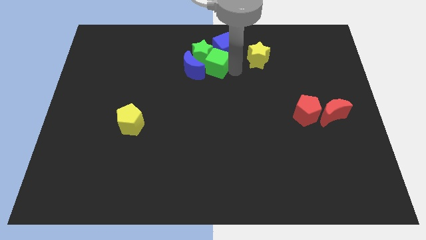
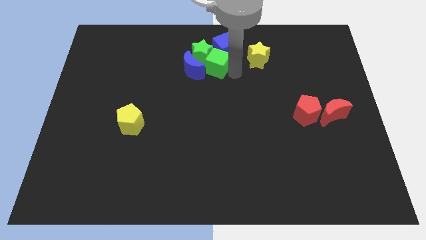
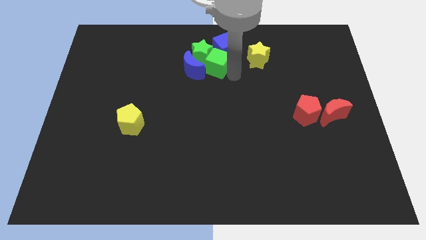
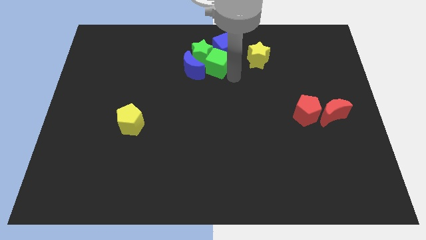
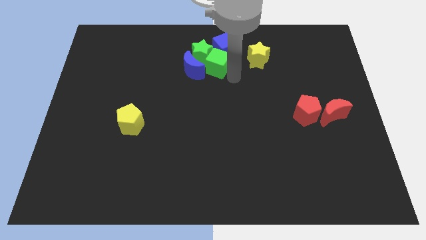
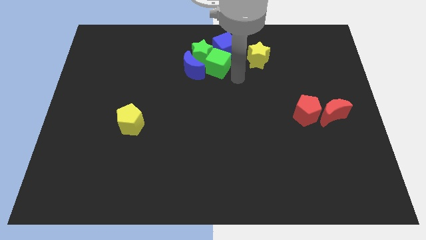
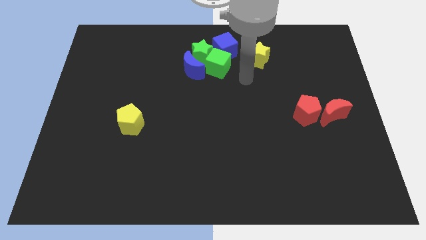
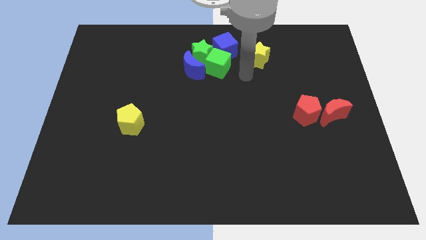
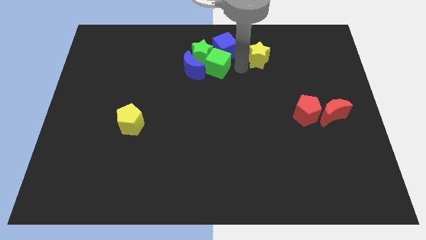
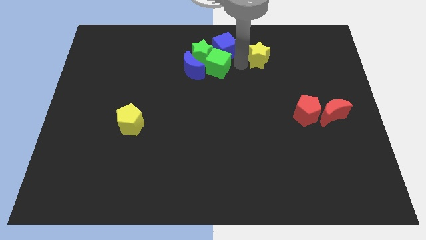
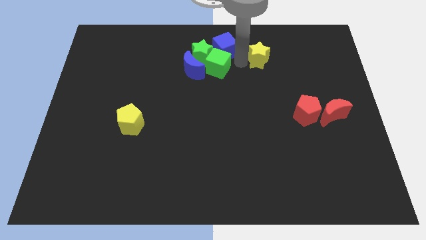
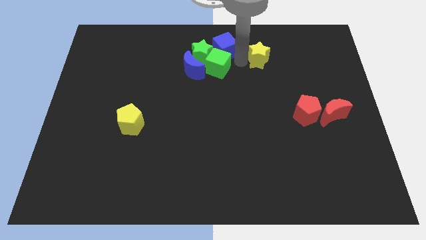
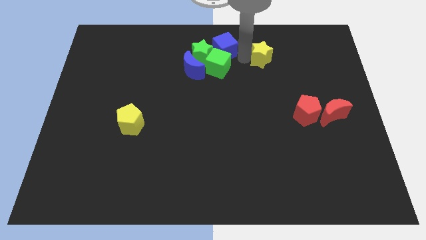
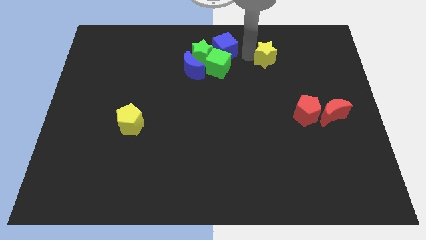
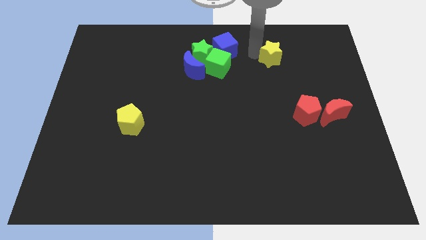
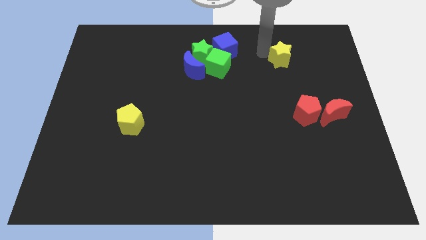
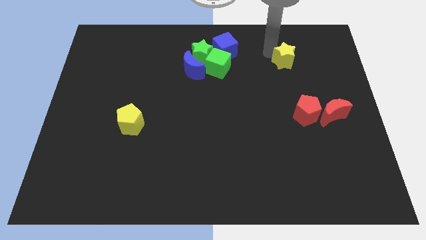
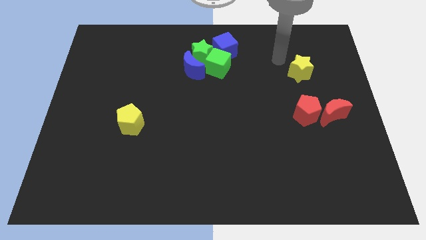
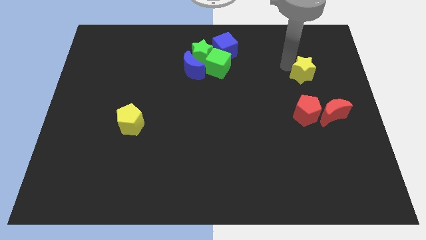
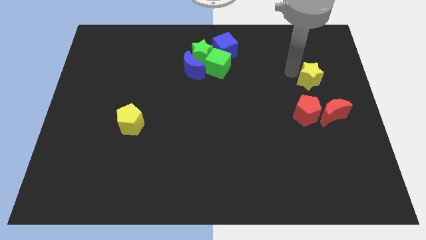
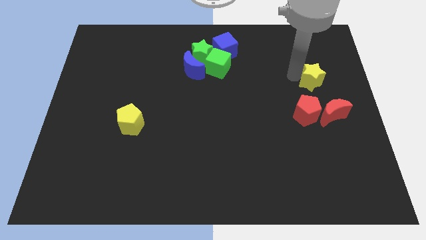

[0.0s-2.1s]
place yellow star on top of red pentagon

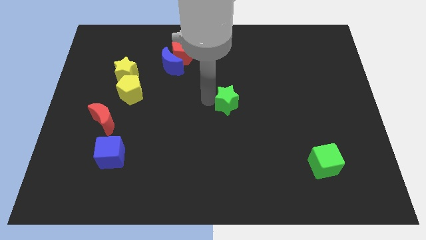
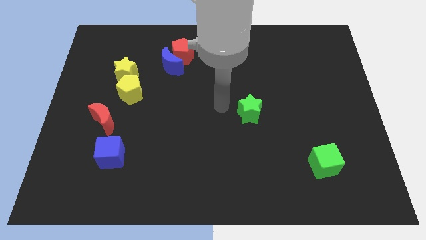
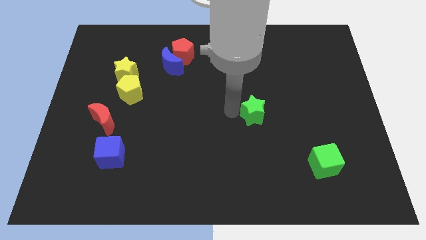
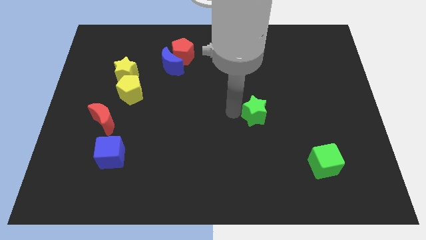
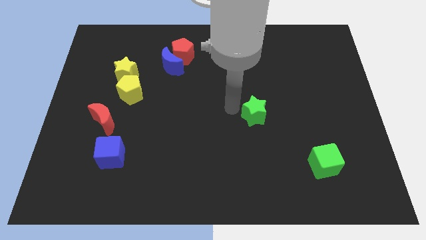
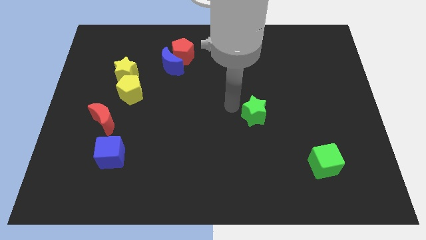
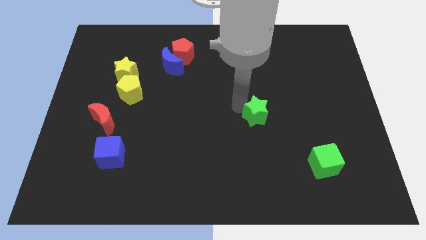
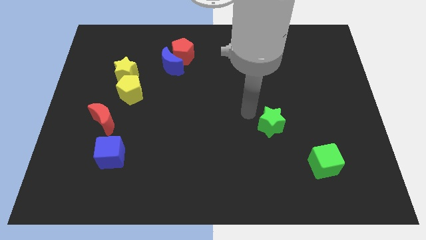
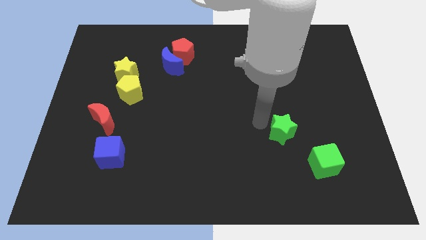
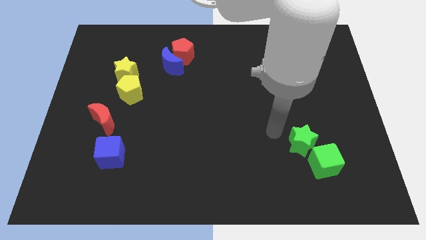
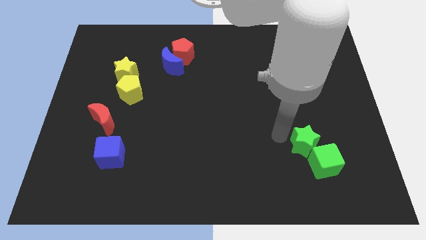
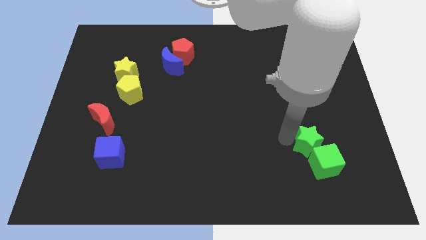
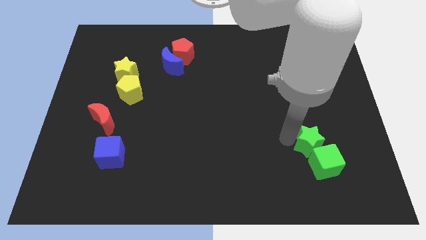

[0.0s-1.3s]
move green star near to the green cube

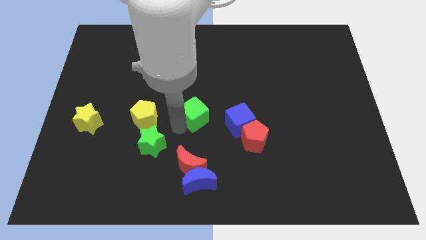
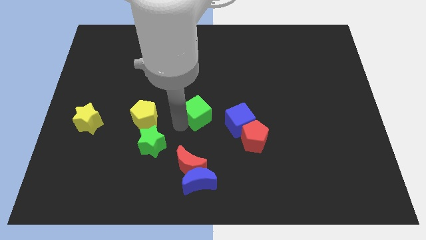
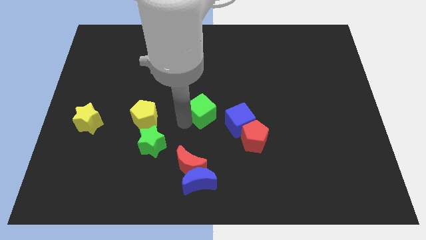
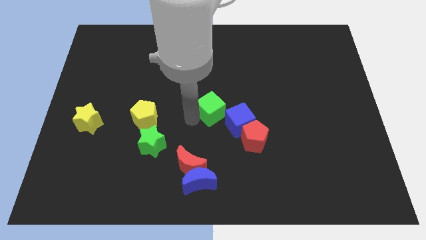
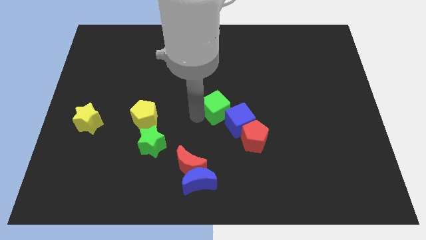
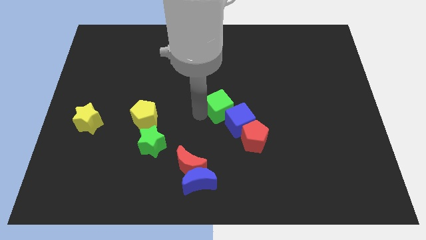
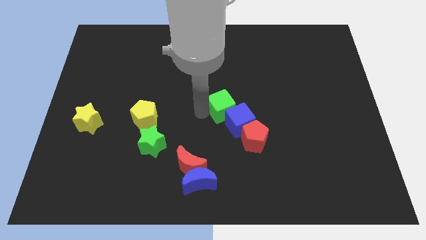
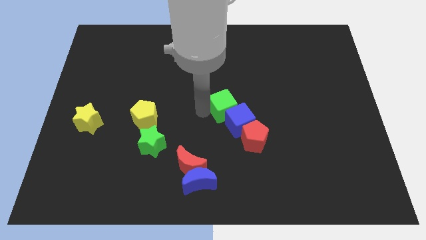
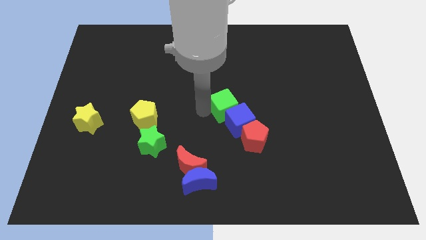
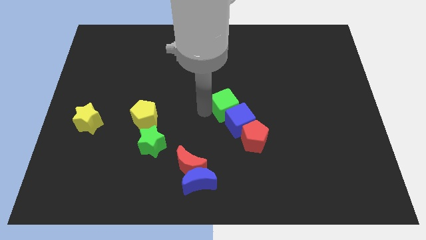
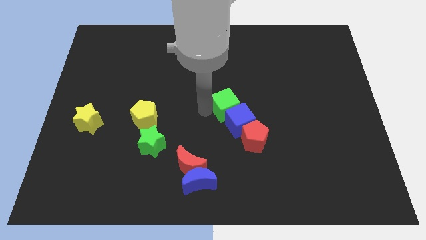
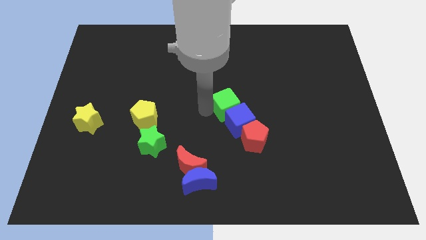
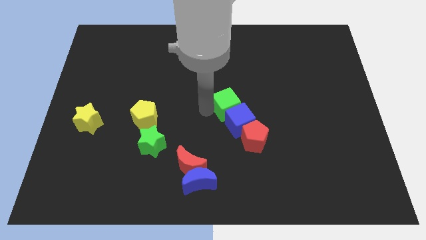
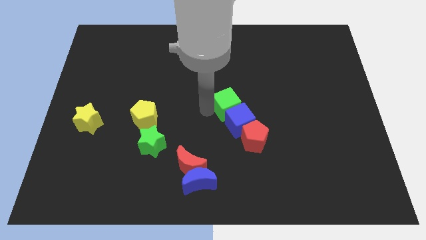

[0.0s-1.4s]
place the green cube on top of the blue cube to form a diagnoal line

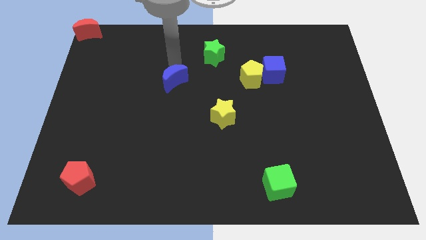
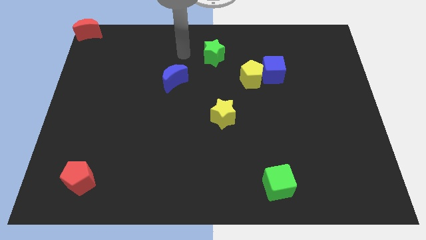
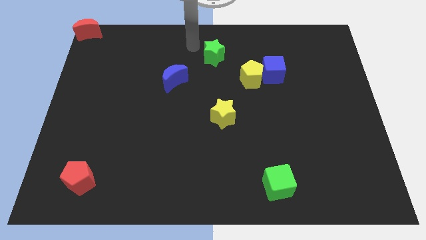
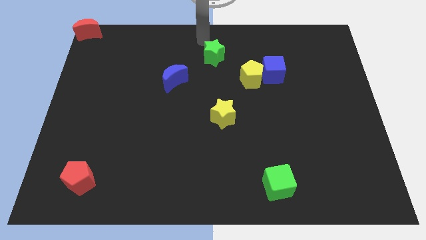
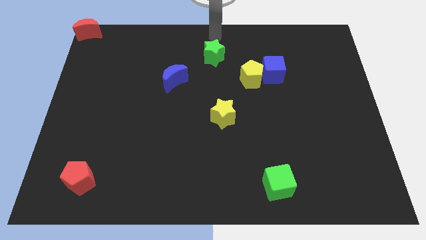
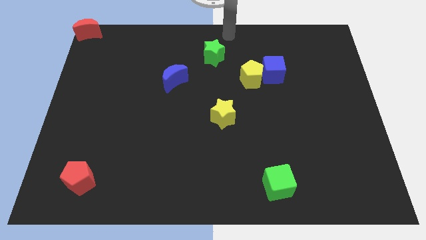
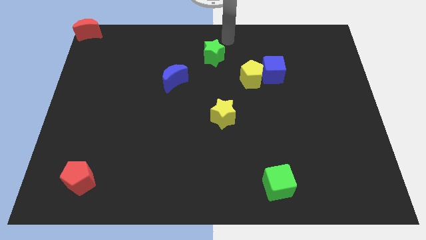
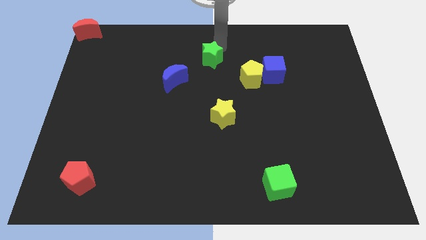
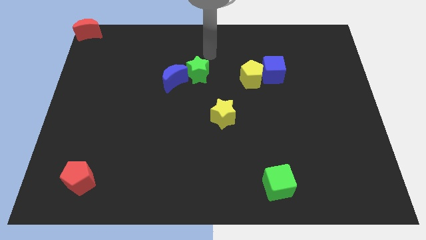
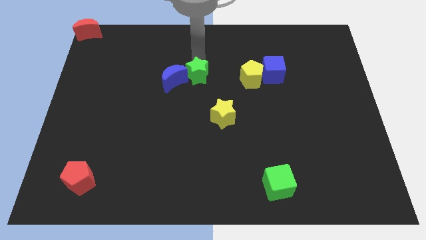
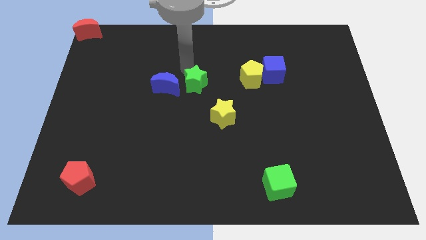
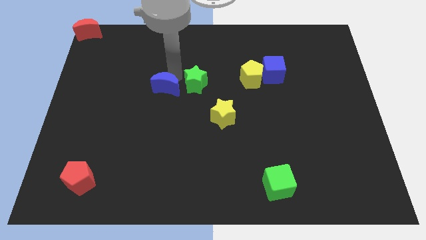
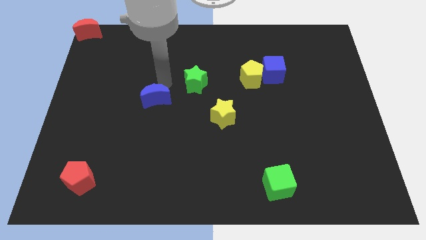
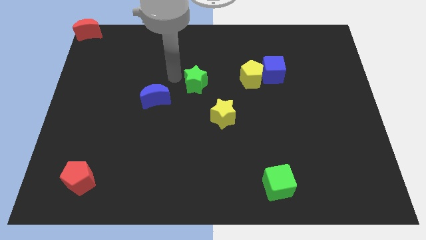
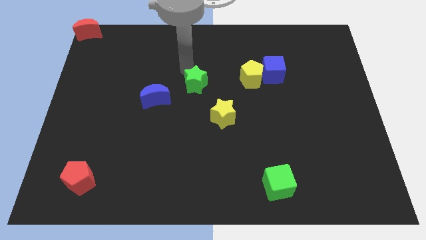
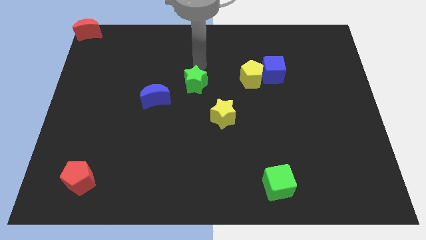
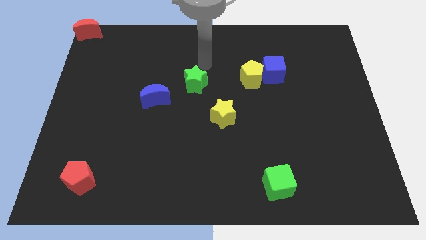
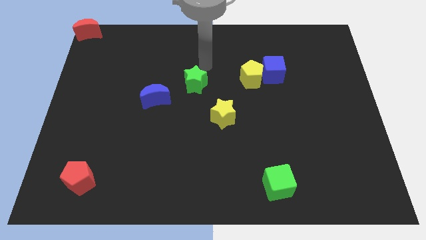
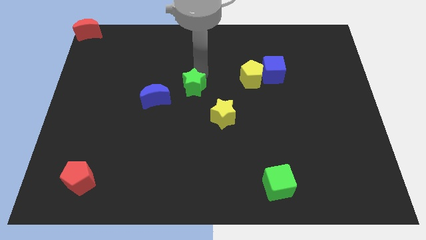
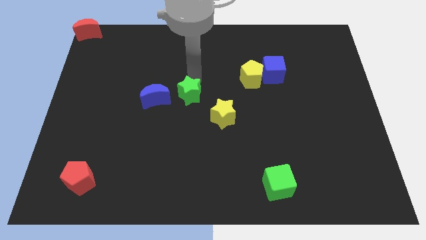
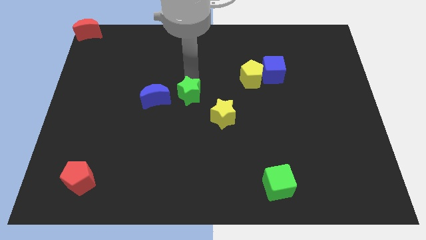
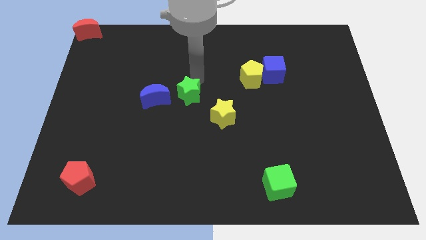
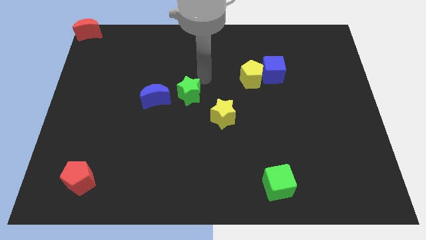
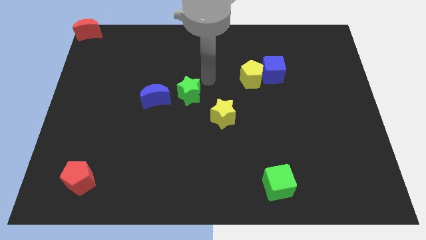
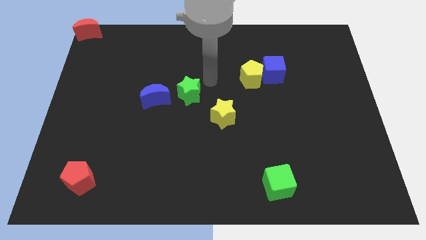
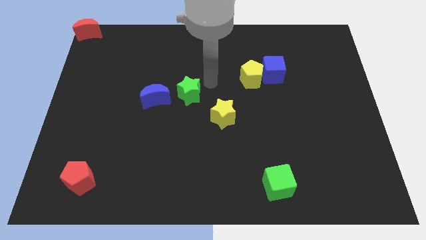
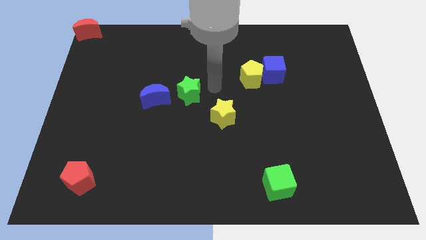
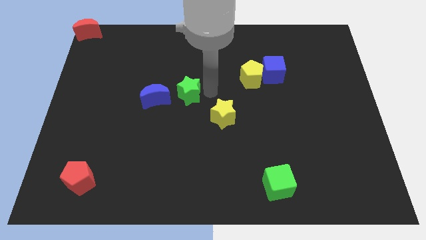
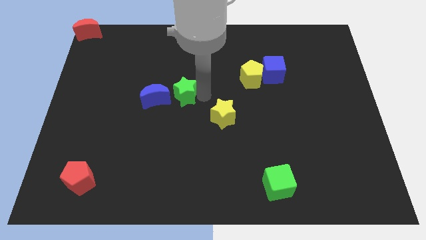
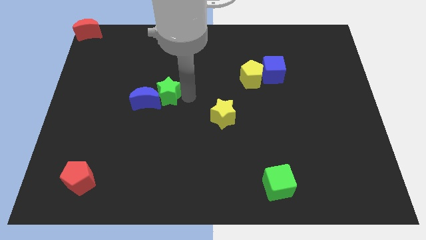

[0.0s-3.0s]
move the green star to the right of the blue crescent

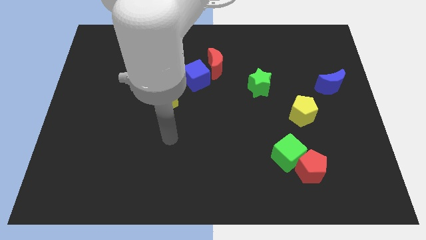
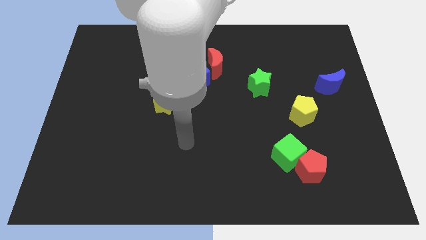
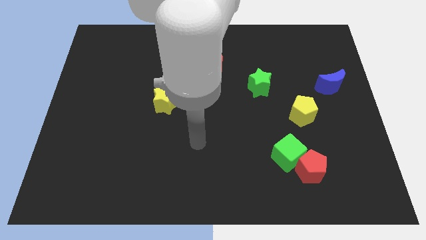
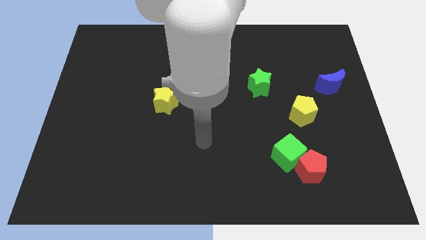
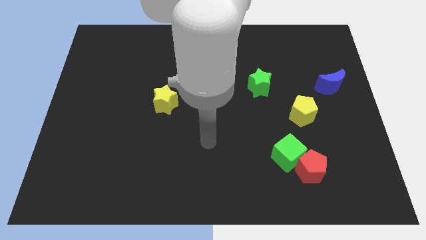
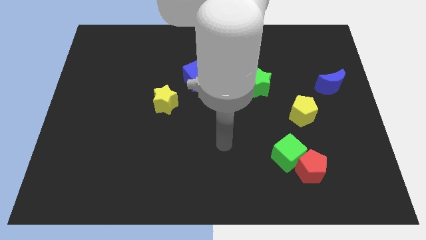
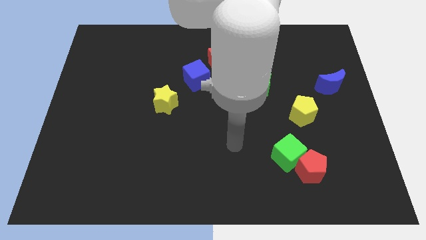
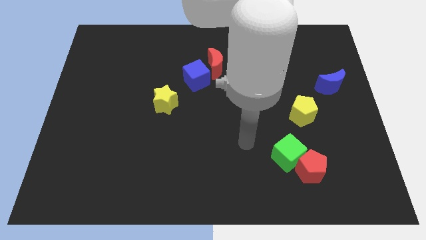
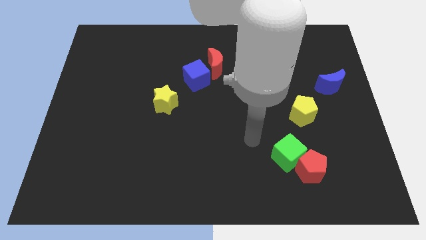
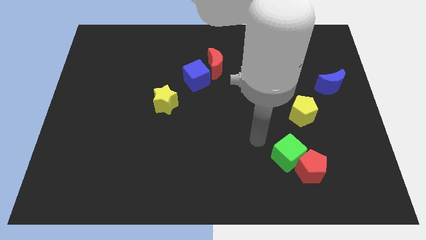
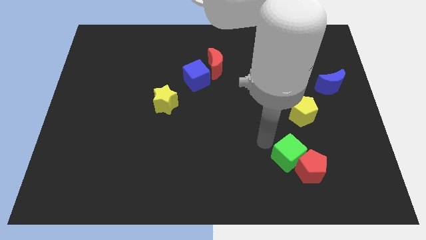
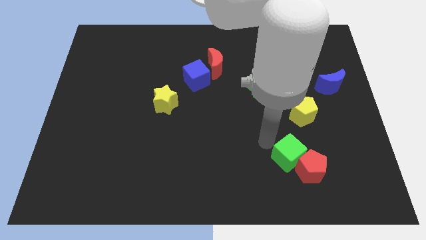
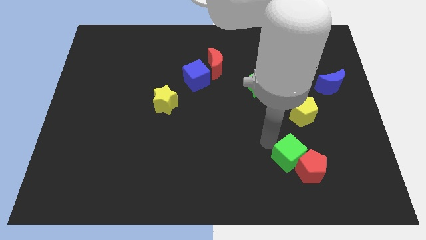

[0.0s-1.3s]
place your arm at the left of the green cube
